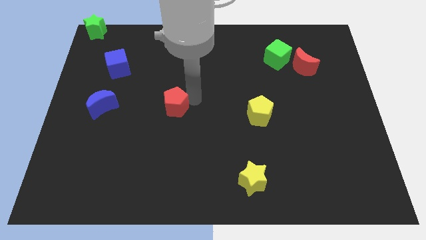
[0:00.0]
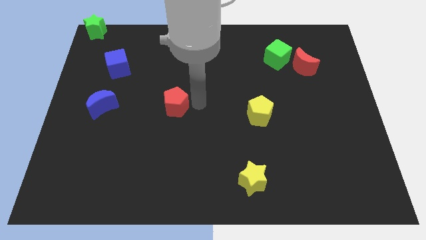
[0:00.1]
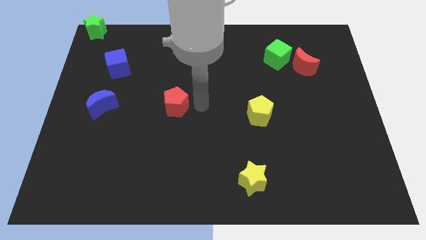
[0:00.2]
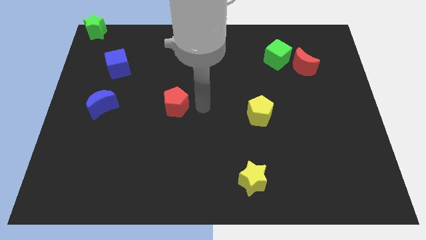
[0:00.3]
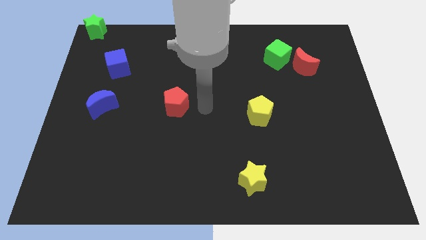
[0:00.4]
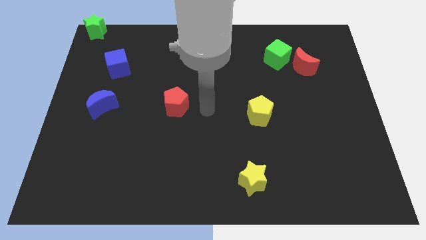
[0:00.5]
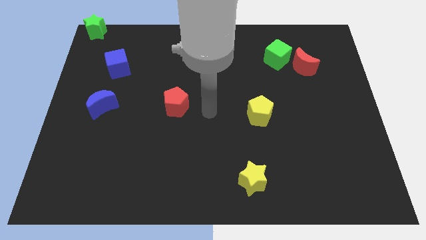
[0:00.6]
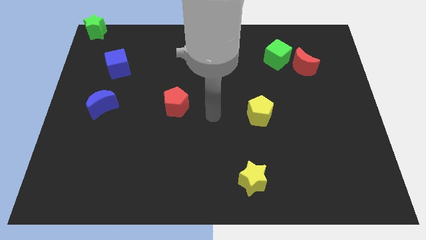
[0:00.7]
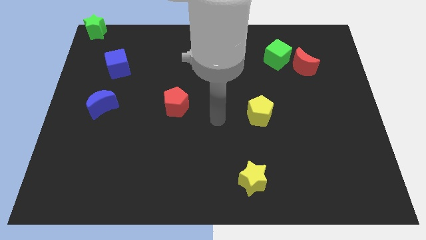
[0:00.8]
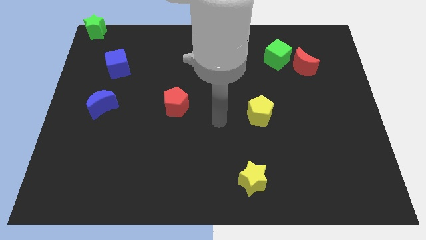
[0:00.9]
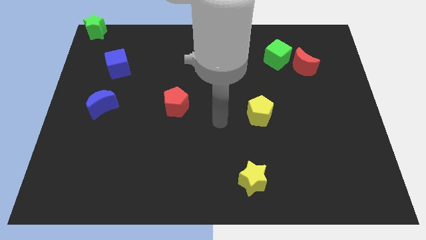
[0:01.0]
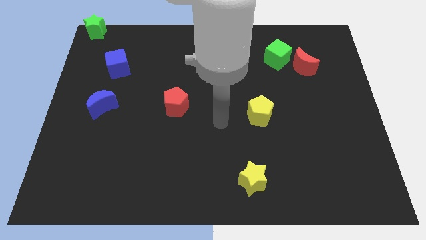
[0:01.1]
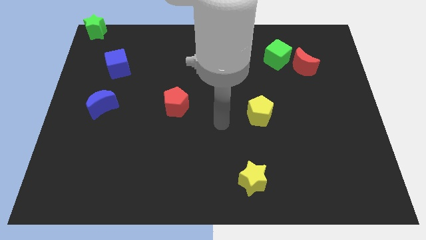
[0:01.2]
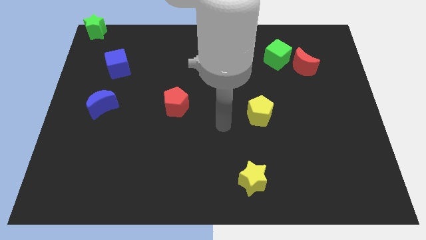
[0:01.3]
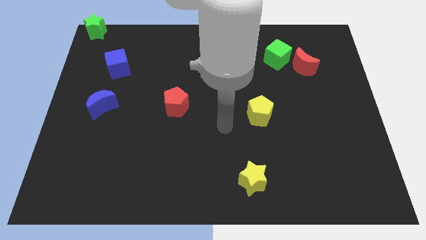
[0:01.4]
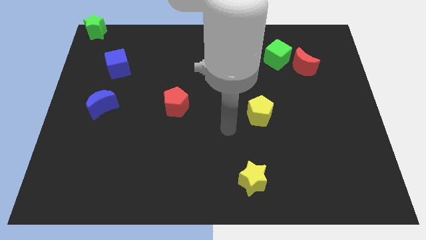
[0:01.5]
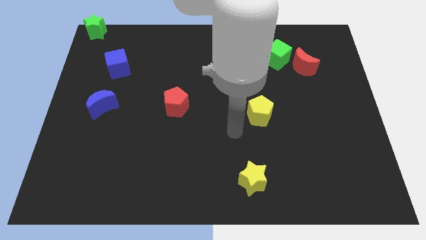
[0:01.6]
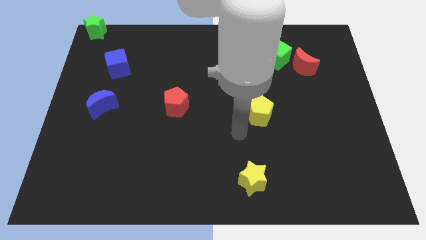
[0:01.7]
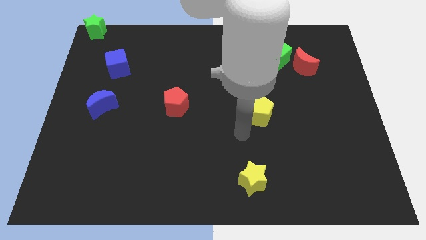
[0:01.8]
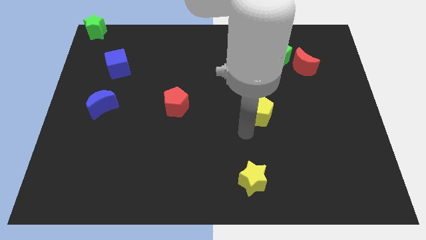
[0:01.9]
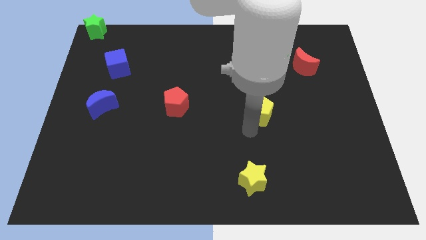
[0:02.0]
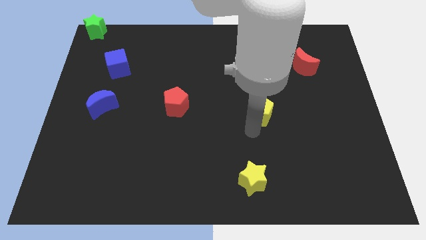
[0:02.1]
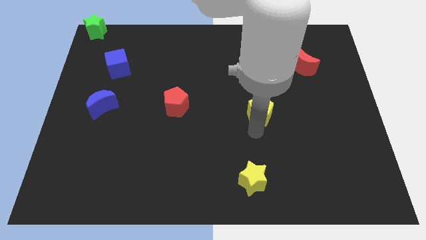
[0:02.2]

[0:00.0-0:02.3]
move your arm to the bottom of the yellow pentagon

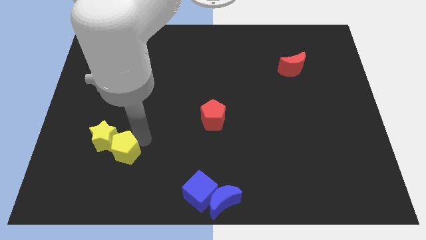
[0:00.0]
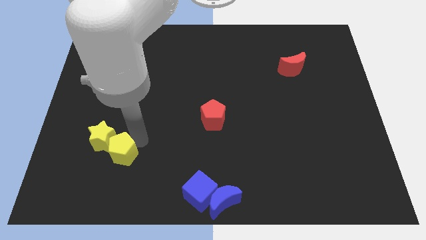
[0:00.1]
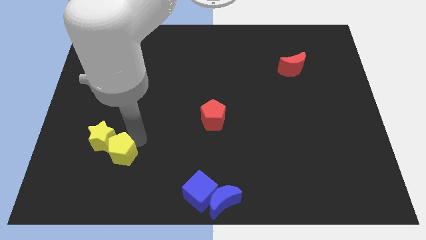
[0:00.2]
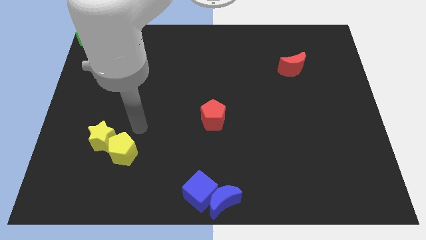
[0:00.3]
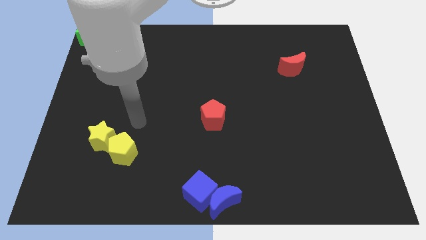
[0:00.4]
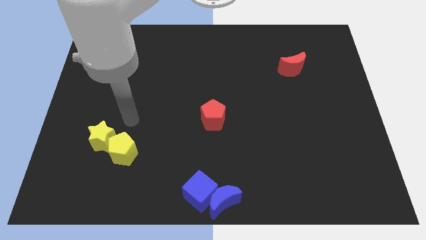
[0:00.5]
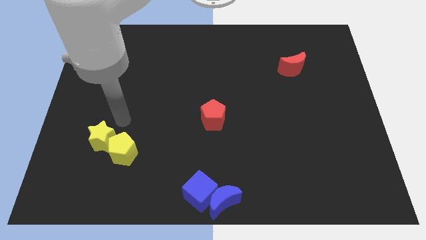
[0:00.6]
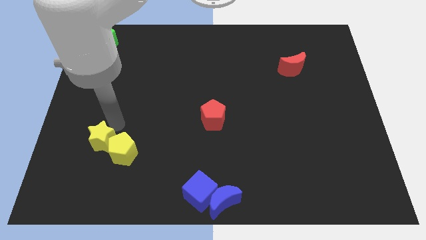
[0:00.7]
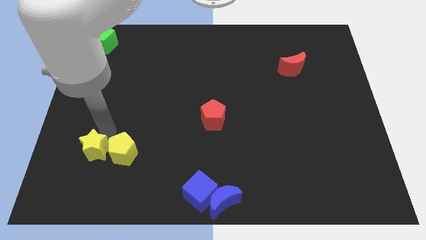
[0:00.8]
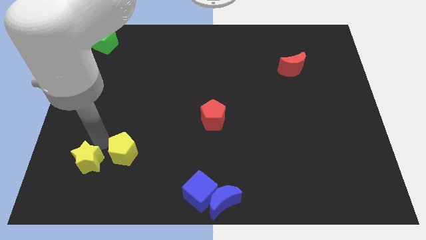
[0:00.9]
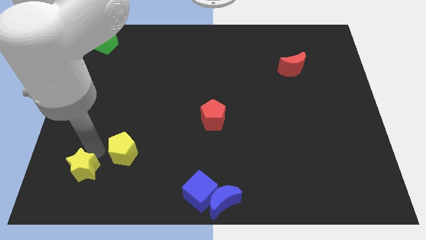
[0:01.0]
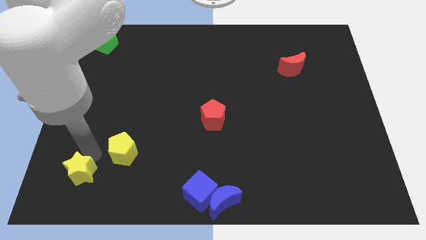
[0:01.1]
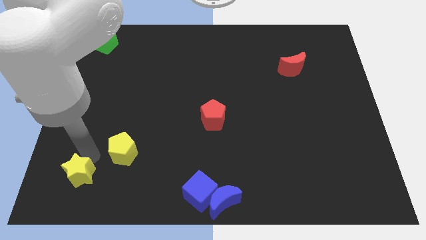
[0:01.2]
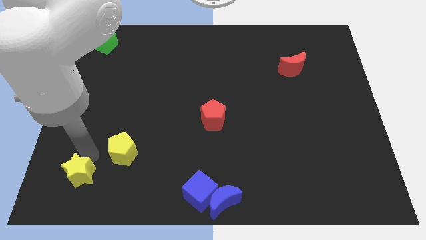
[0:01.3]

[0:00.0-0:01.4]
separate yellow star and yellow pentagon

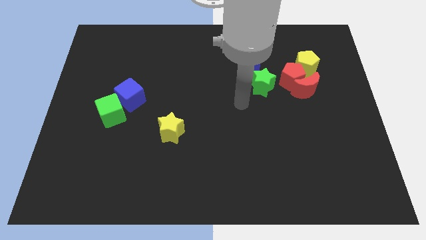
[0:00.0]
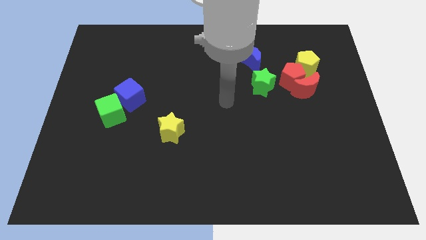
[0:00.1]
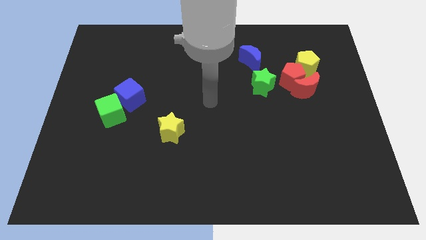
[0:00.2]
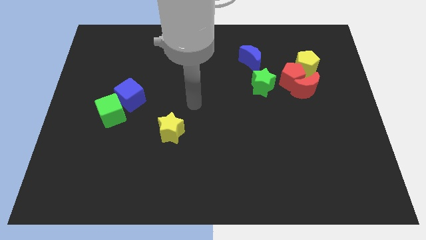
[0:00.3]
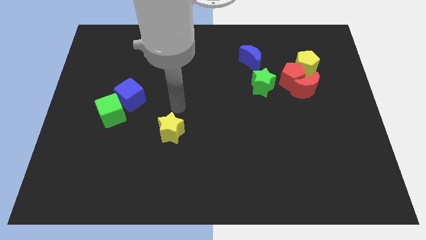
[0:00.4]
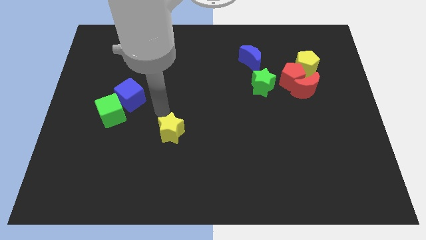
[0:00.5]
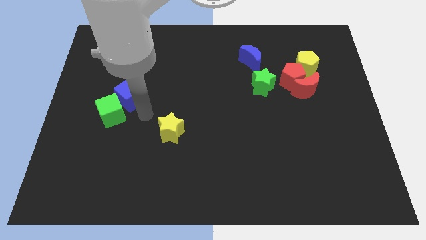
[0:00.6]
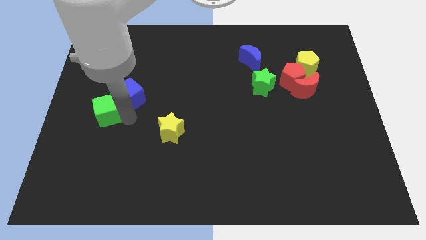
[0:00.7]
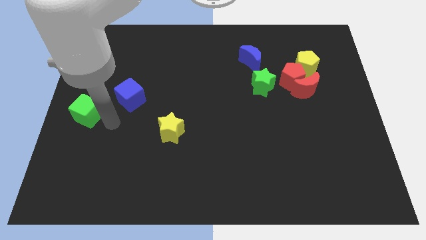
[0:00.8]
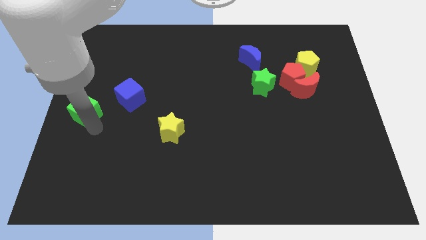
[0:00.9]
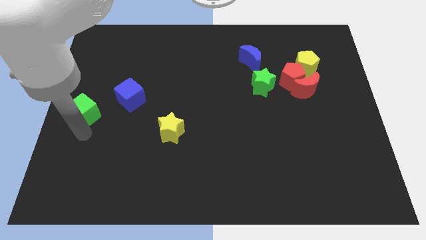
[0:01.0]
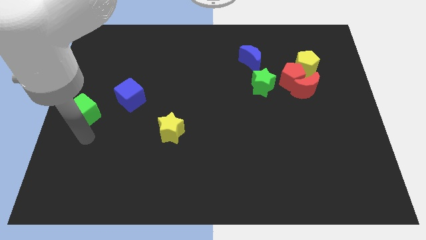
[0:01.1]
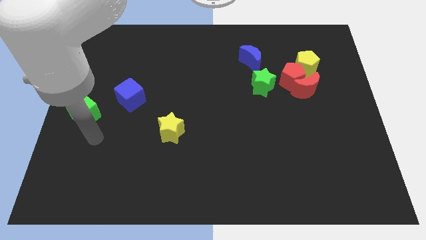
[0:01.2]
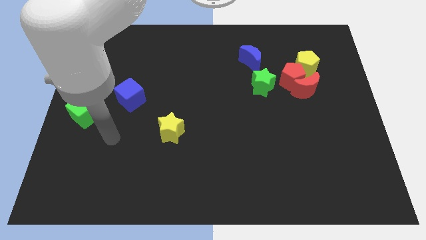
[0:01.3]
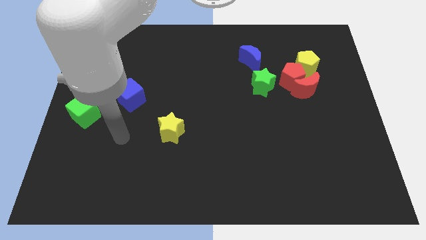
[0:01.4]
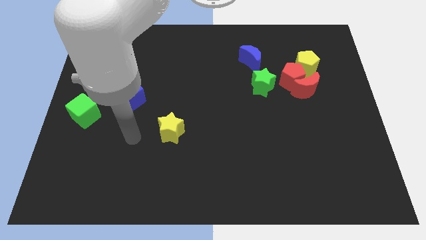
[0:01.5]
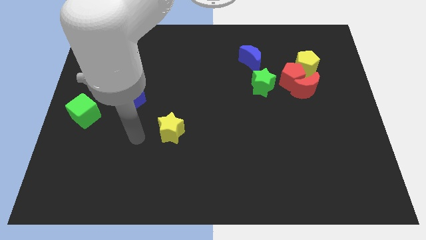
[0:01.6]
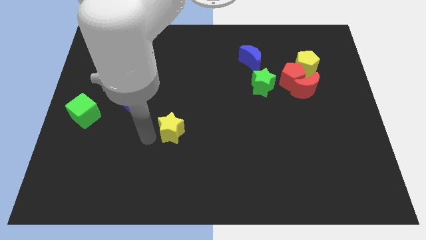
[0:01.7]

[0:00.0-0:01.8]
place the green cube at the center left of the board

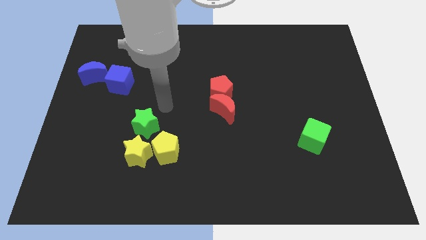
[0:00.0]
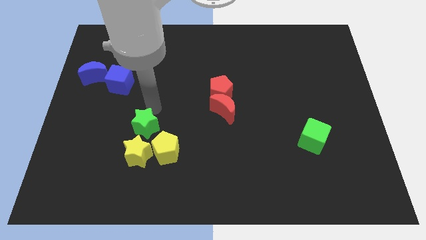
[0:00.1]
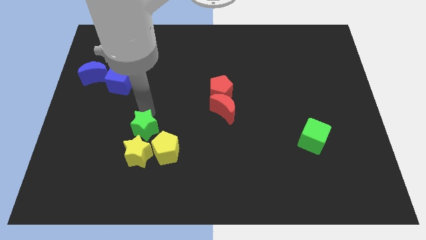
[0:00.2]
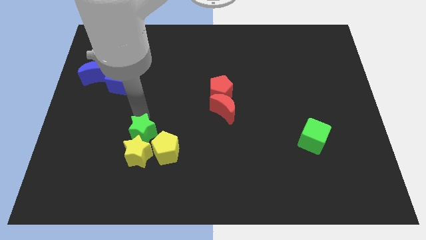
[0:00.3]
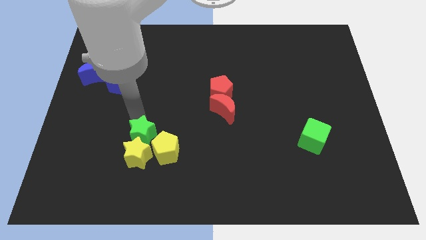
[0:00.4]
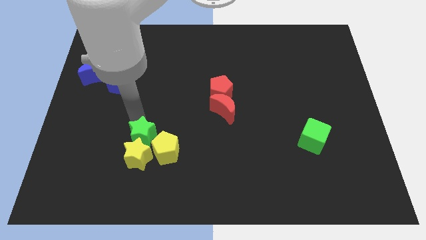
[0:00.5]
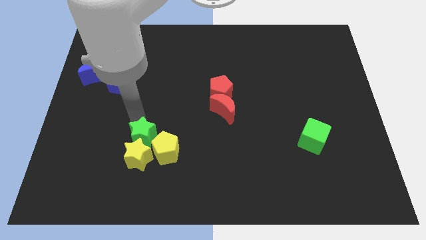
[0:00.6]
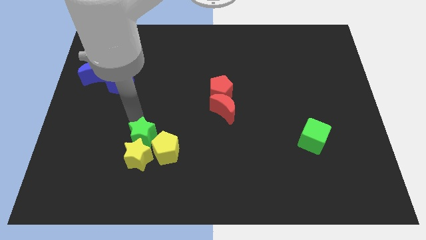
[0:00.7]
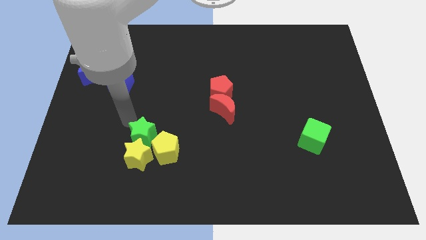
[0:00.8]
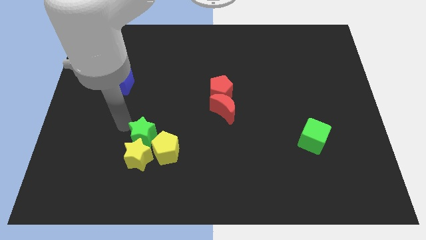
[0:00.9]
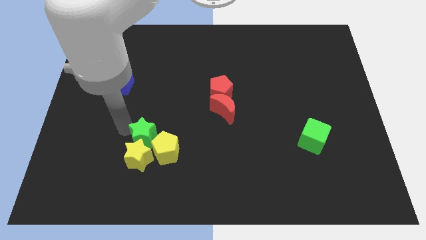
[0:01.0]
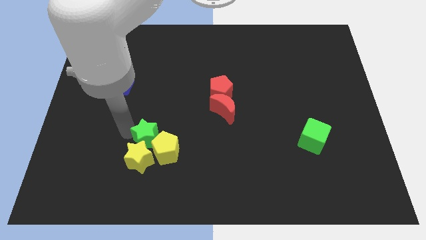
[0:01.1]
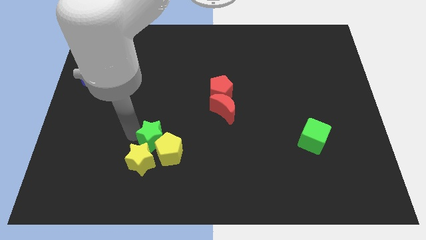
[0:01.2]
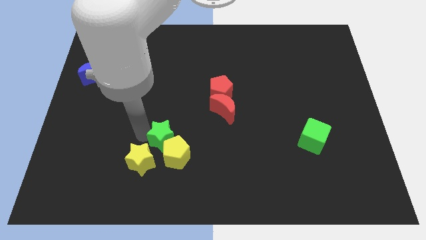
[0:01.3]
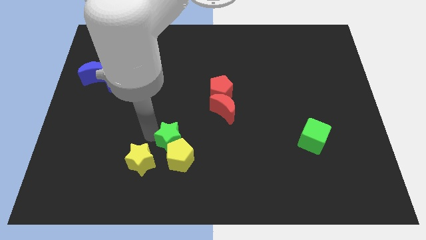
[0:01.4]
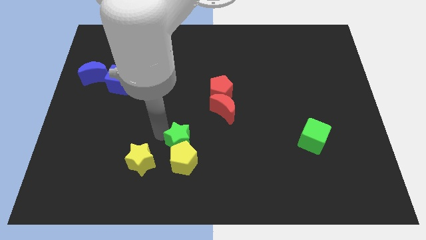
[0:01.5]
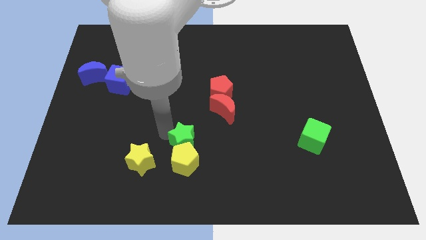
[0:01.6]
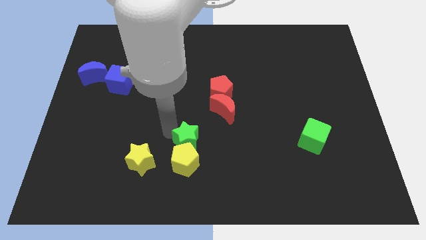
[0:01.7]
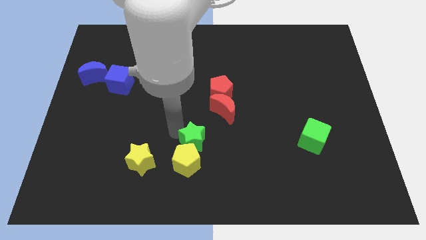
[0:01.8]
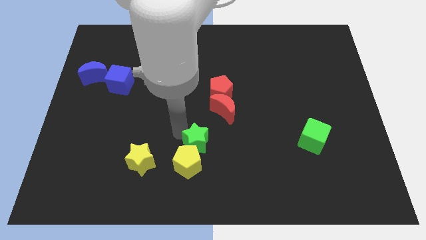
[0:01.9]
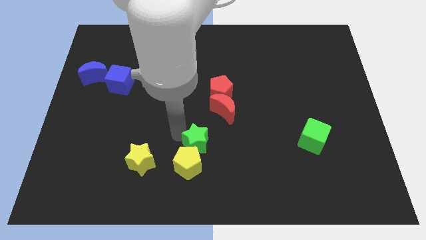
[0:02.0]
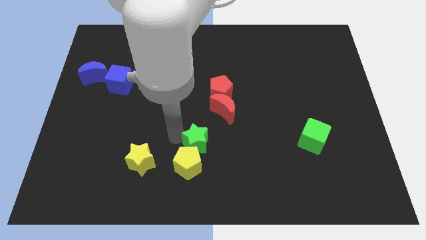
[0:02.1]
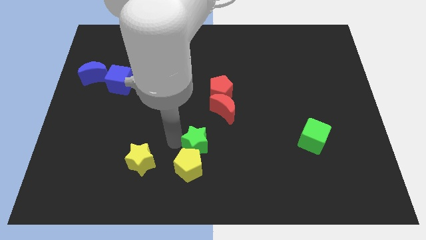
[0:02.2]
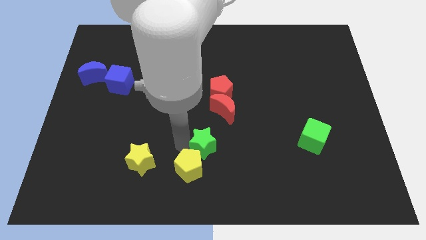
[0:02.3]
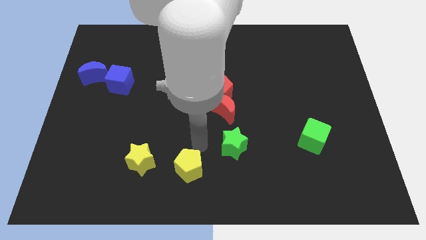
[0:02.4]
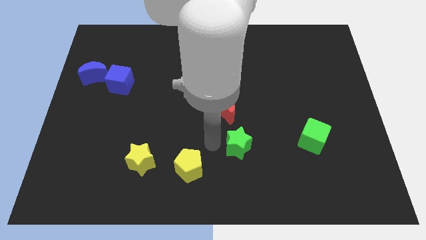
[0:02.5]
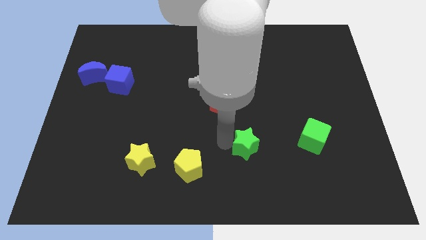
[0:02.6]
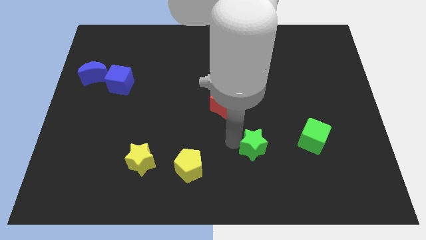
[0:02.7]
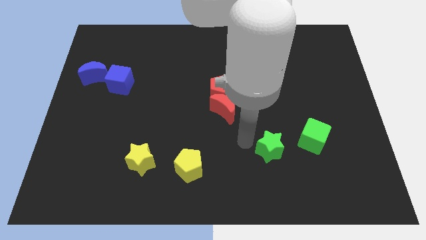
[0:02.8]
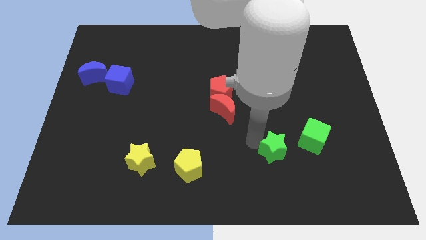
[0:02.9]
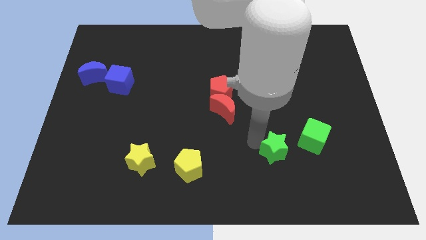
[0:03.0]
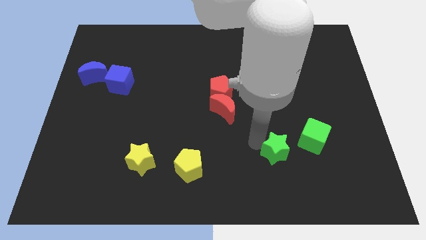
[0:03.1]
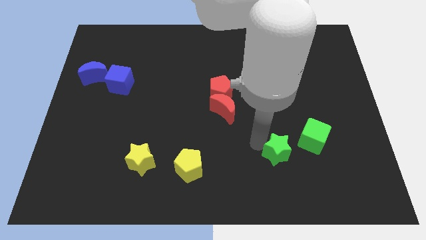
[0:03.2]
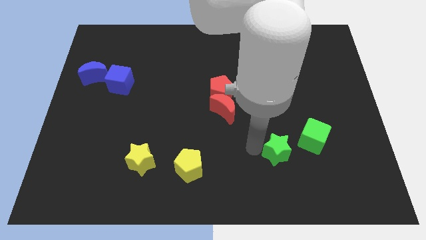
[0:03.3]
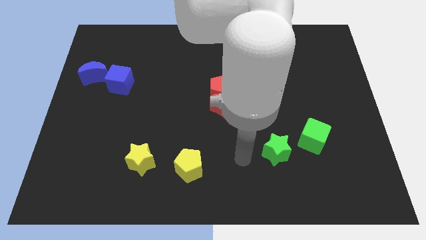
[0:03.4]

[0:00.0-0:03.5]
place the green star to the center of the board
